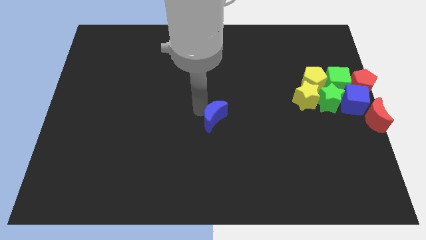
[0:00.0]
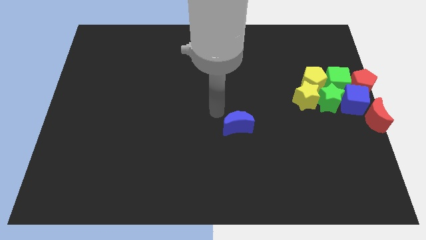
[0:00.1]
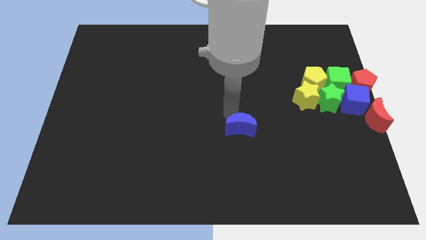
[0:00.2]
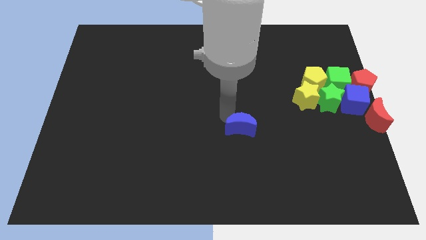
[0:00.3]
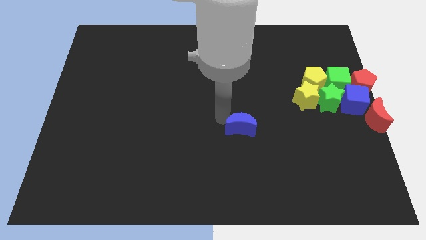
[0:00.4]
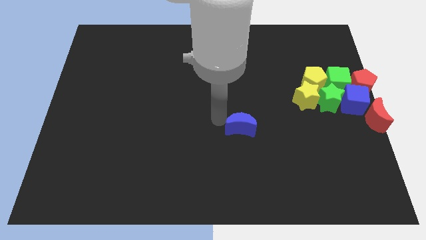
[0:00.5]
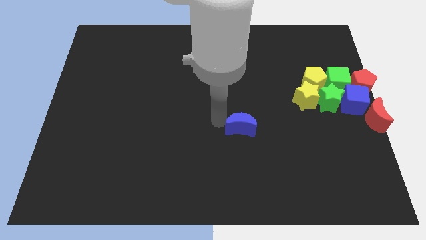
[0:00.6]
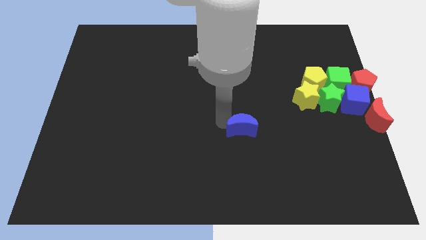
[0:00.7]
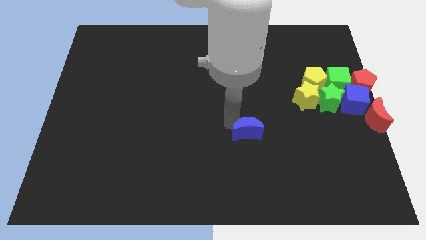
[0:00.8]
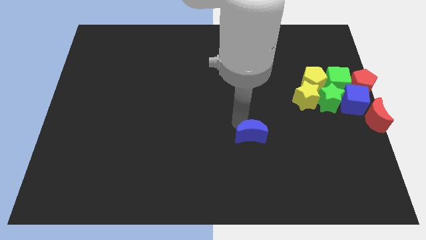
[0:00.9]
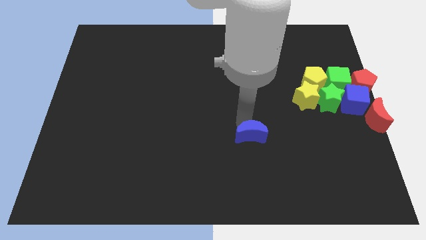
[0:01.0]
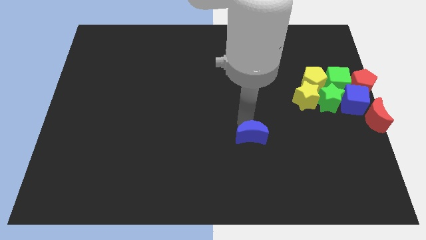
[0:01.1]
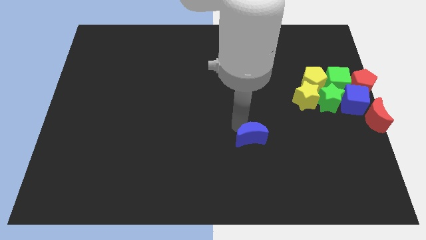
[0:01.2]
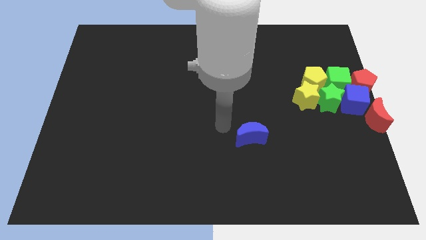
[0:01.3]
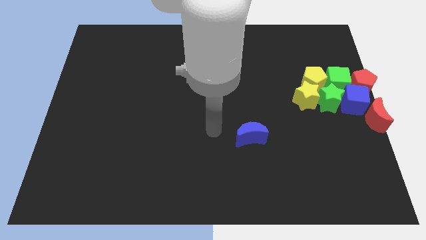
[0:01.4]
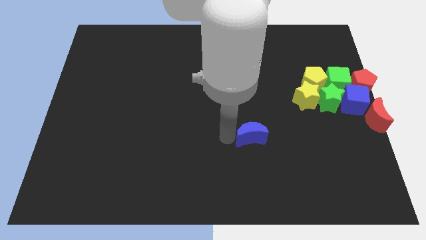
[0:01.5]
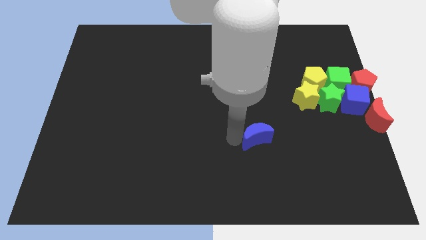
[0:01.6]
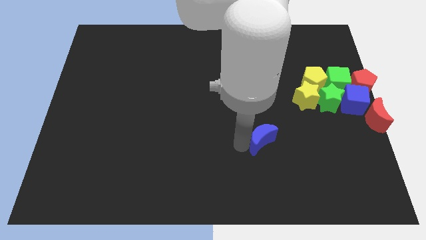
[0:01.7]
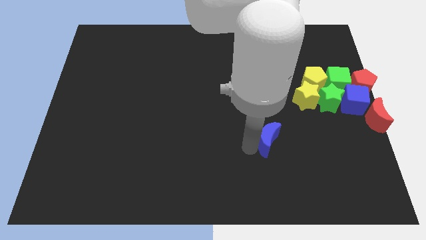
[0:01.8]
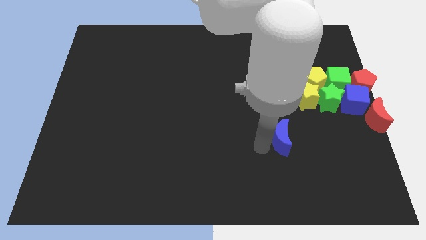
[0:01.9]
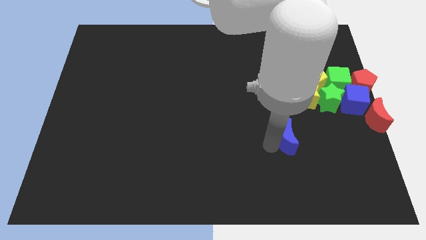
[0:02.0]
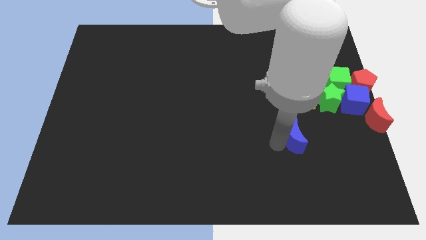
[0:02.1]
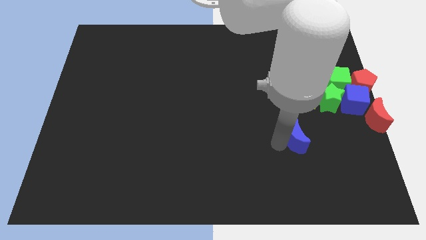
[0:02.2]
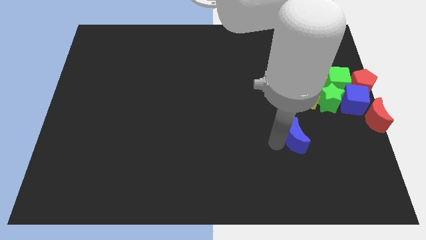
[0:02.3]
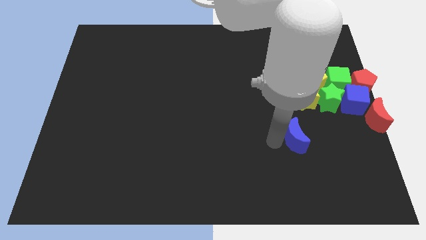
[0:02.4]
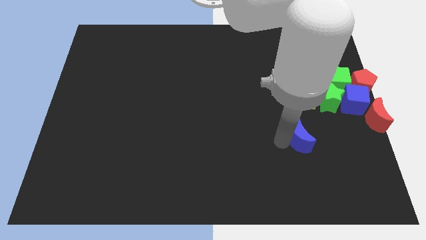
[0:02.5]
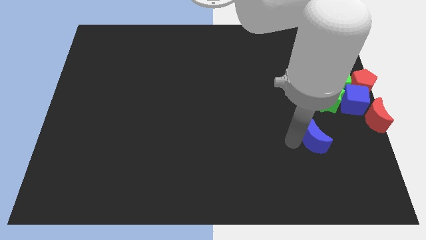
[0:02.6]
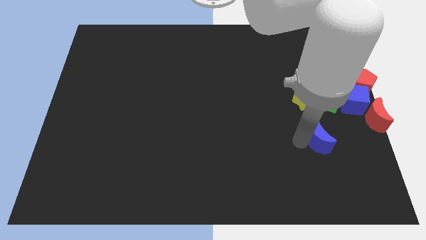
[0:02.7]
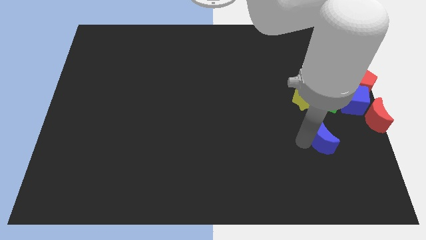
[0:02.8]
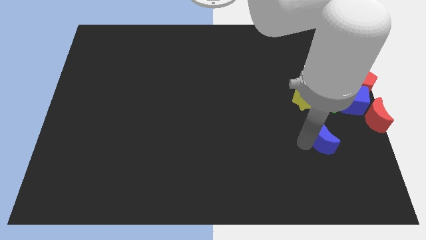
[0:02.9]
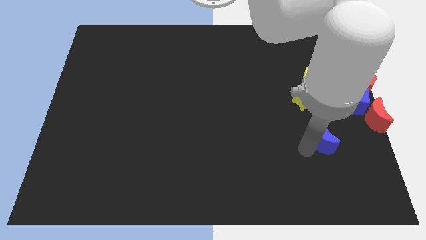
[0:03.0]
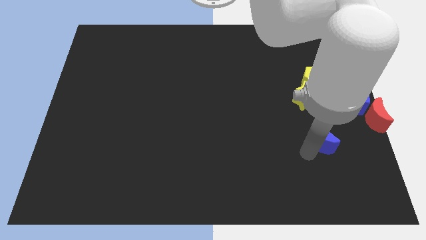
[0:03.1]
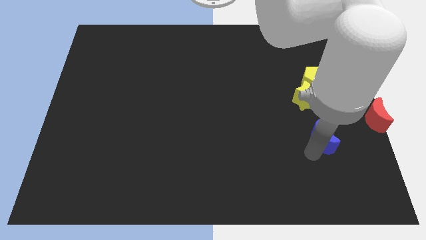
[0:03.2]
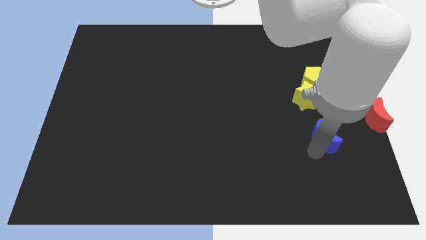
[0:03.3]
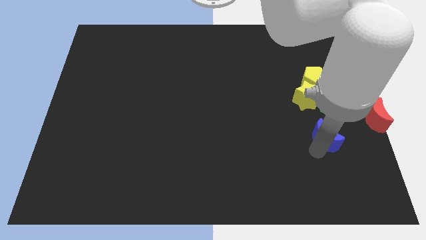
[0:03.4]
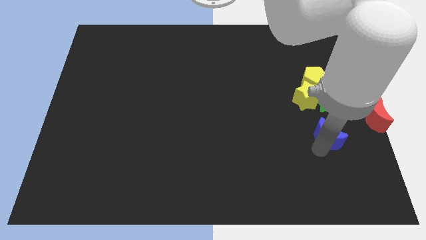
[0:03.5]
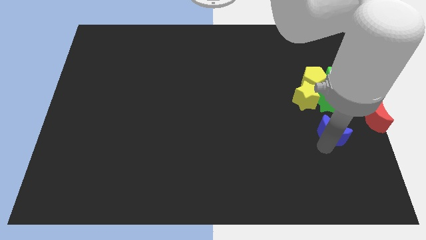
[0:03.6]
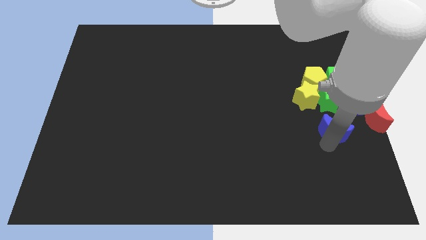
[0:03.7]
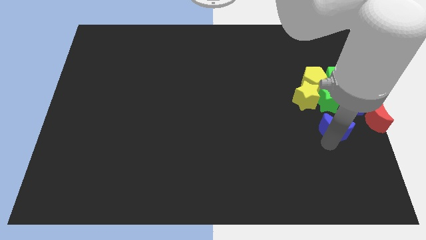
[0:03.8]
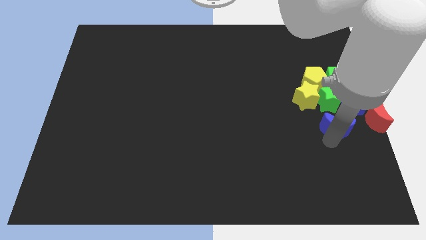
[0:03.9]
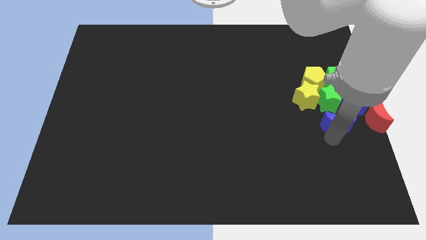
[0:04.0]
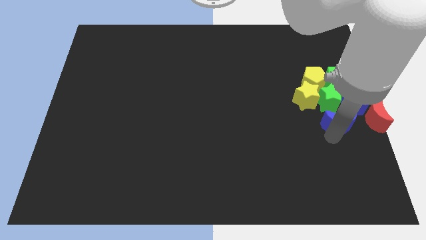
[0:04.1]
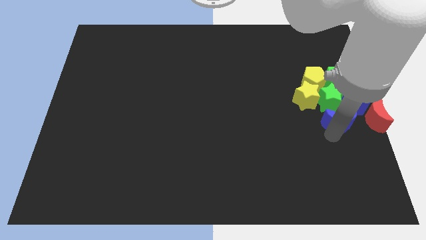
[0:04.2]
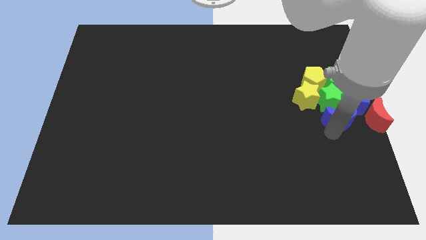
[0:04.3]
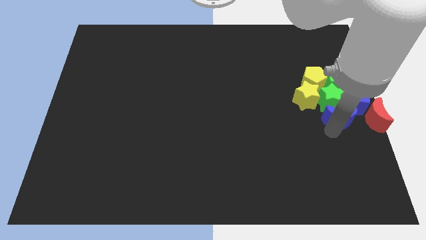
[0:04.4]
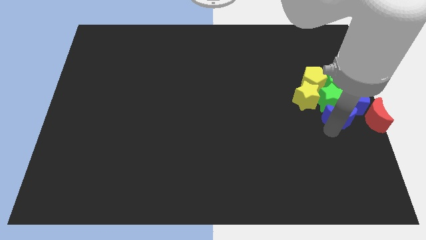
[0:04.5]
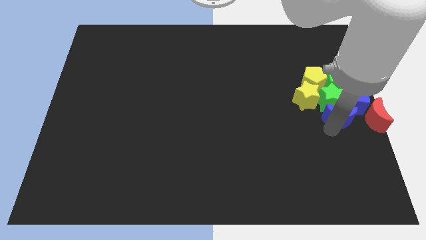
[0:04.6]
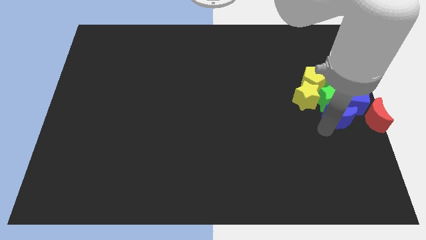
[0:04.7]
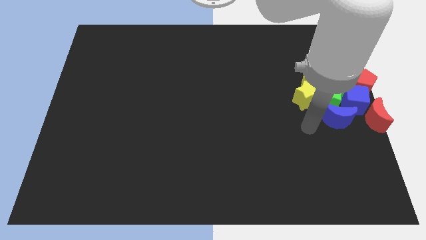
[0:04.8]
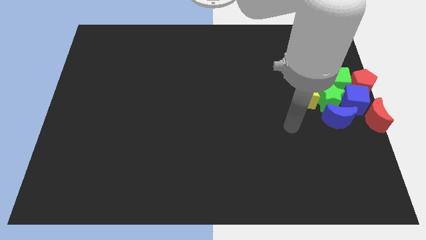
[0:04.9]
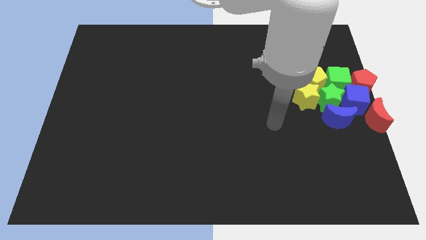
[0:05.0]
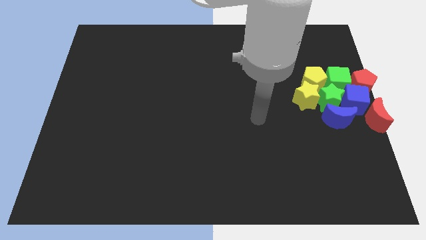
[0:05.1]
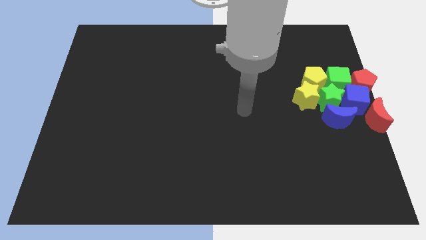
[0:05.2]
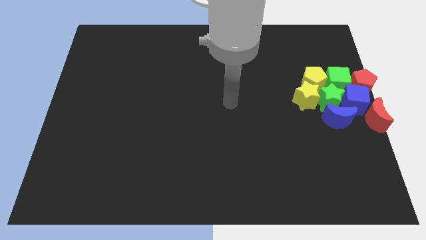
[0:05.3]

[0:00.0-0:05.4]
place the blue crescent below to the green star

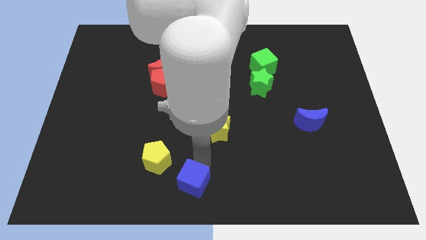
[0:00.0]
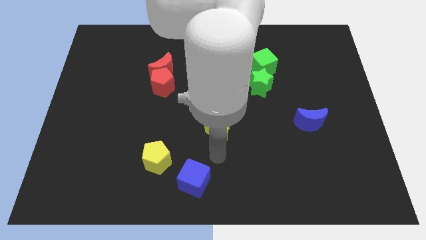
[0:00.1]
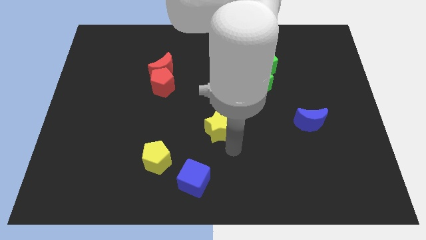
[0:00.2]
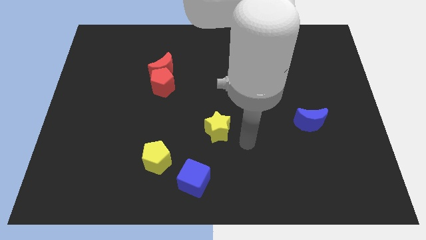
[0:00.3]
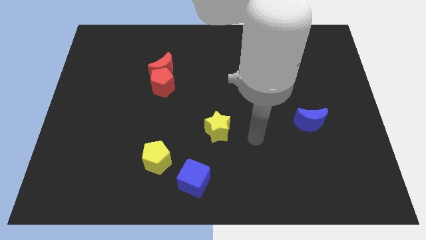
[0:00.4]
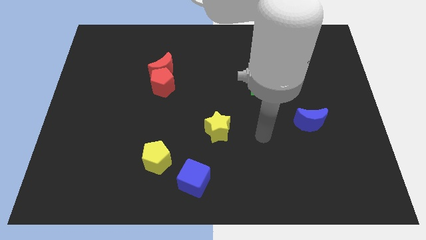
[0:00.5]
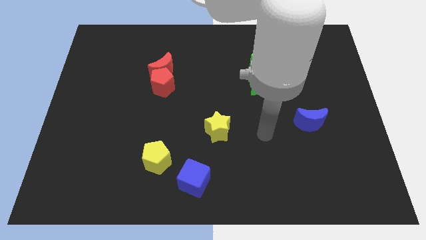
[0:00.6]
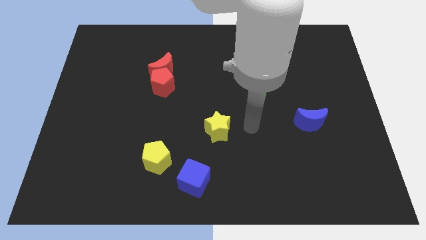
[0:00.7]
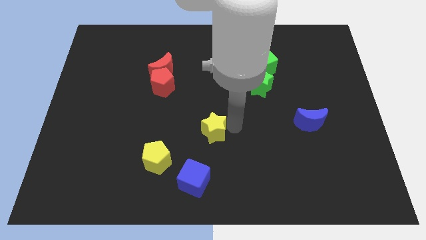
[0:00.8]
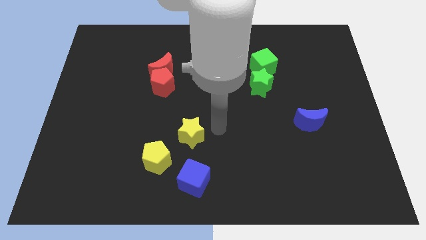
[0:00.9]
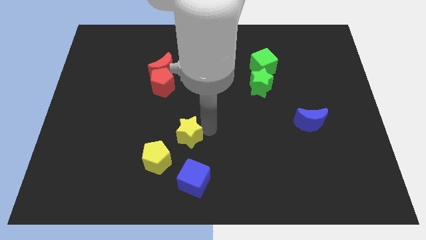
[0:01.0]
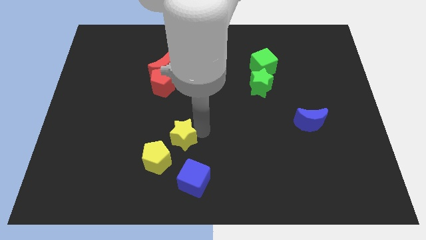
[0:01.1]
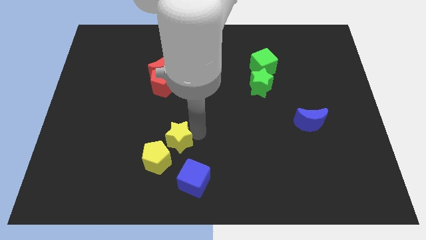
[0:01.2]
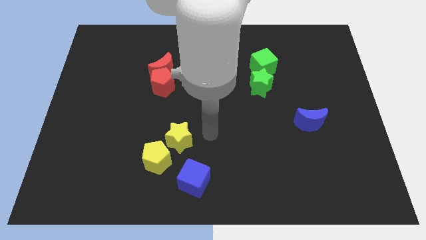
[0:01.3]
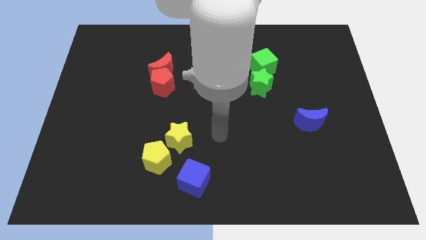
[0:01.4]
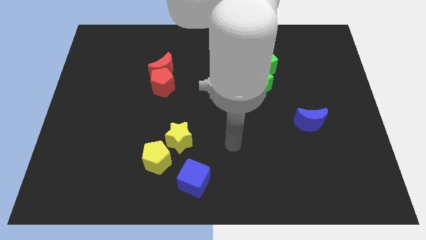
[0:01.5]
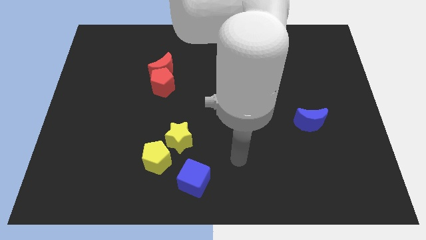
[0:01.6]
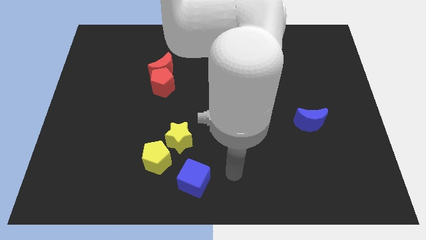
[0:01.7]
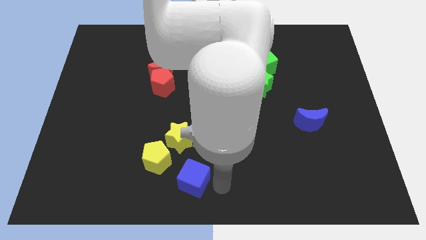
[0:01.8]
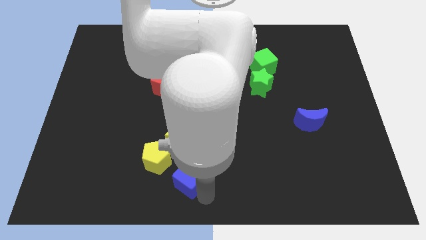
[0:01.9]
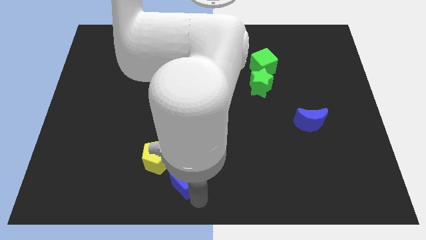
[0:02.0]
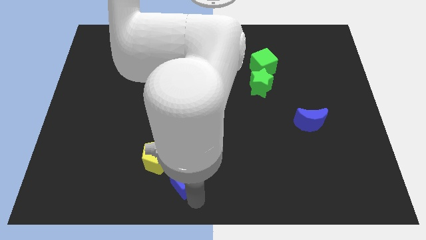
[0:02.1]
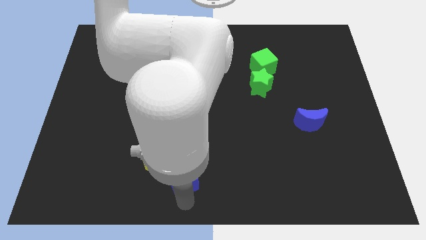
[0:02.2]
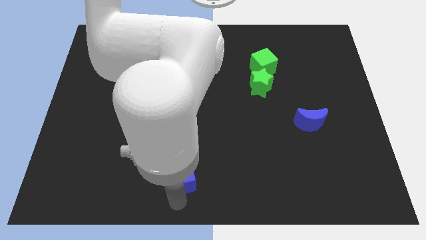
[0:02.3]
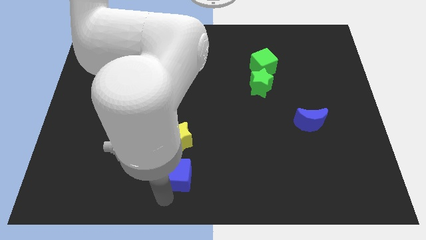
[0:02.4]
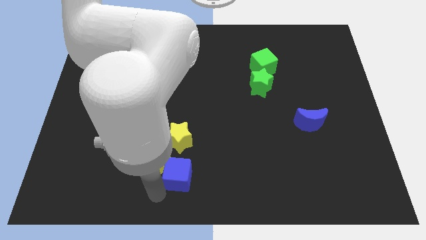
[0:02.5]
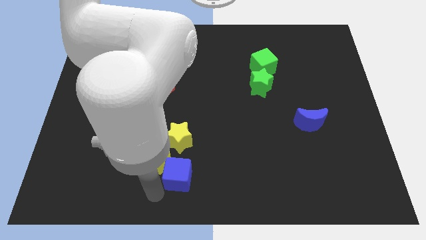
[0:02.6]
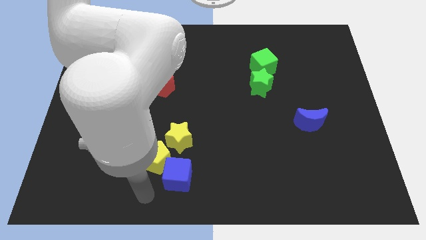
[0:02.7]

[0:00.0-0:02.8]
move the blue cube and yellow star into the yellow pentagon

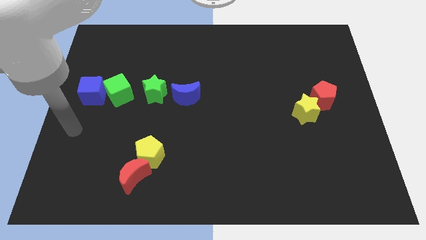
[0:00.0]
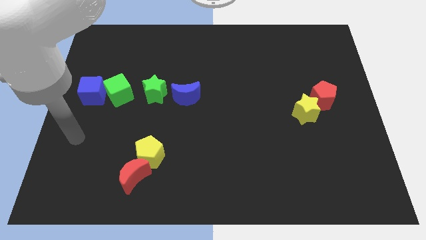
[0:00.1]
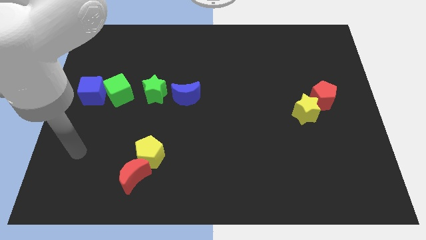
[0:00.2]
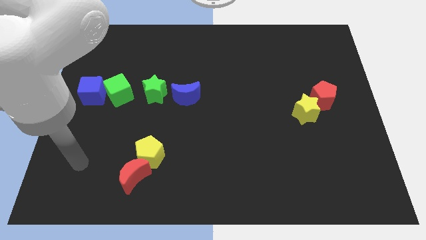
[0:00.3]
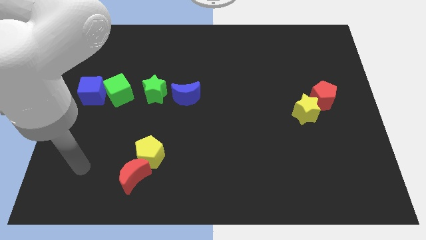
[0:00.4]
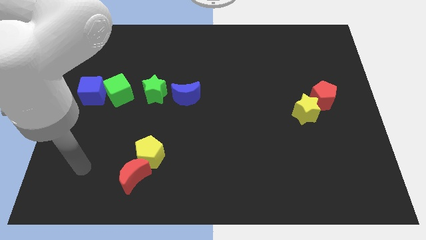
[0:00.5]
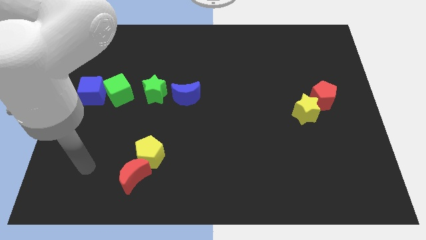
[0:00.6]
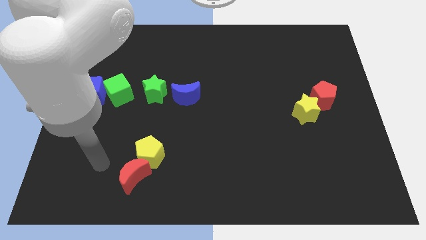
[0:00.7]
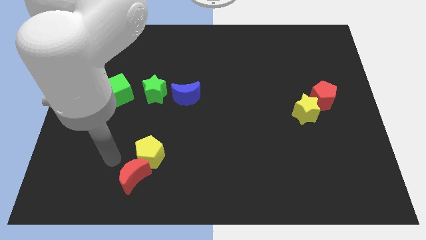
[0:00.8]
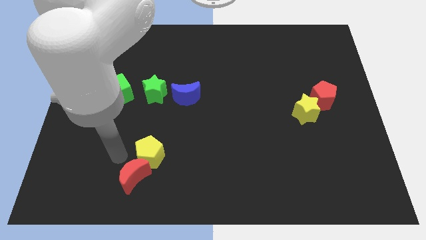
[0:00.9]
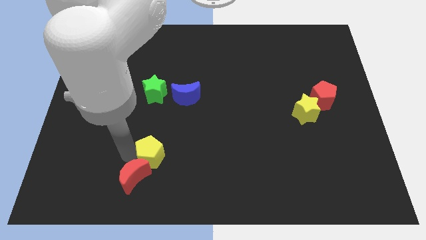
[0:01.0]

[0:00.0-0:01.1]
move the yellow pentagon to the right side
